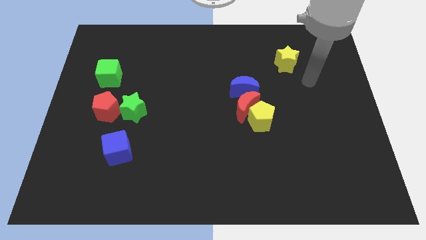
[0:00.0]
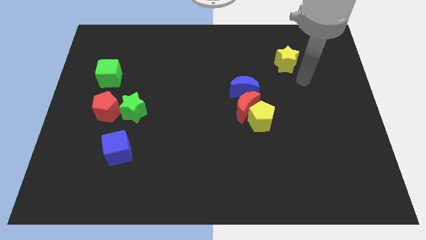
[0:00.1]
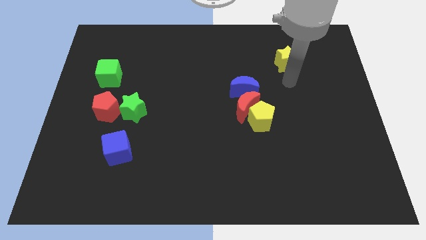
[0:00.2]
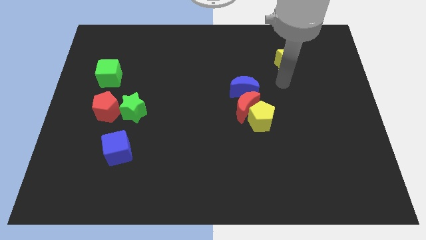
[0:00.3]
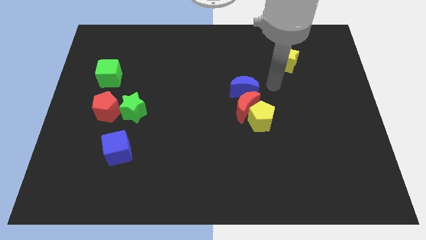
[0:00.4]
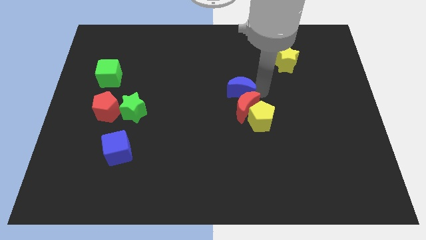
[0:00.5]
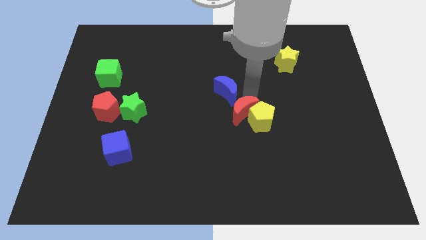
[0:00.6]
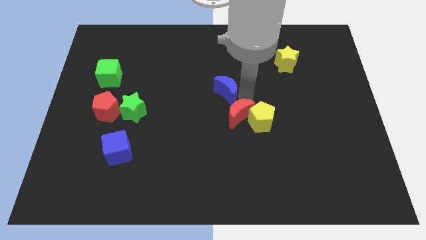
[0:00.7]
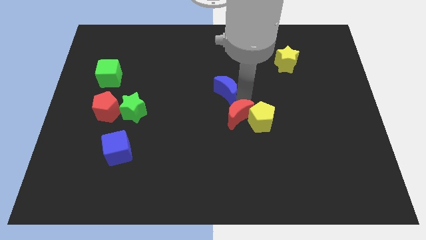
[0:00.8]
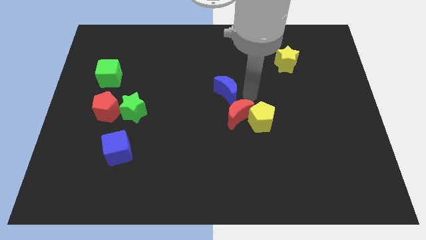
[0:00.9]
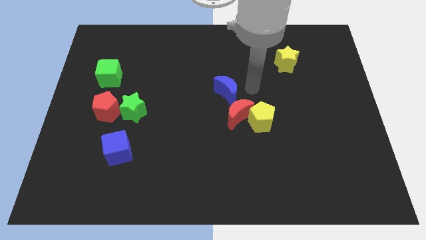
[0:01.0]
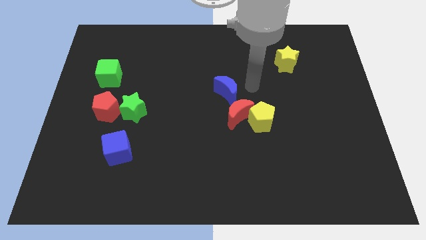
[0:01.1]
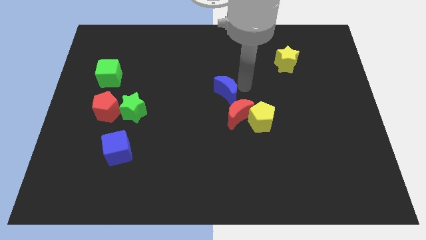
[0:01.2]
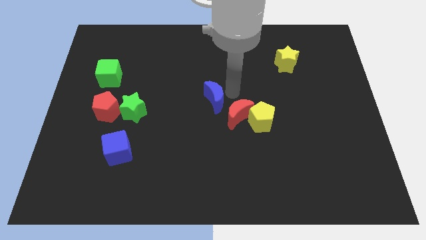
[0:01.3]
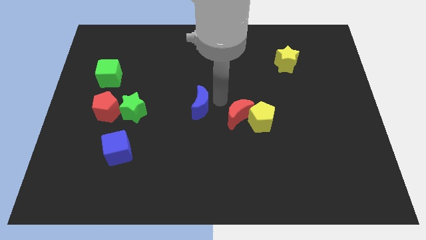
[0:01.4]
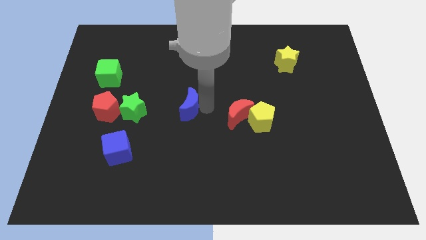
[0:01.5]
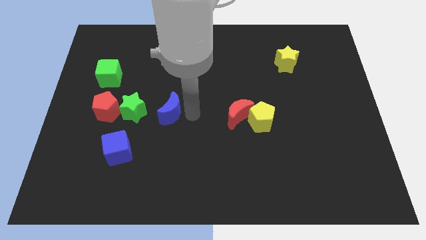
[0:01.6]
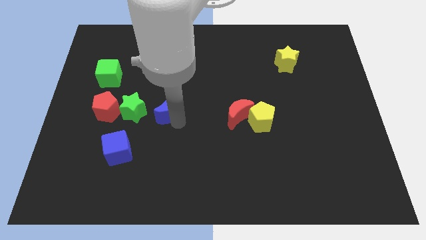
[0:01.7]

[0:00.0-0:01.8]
place blue moon right to green star

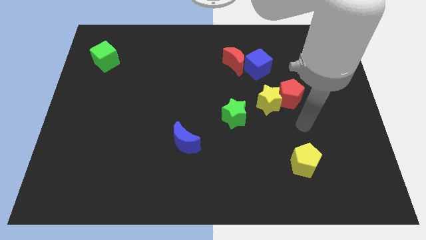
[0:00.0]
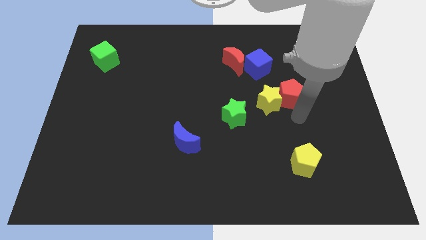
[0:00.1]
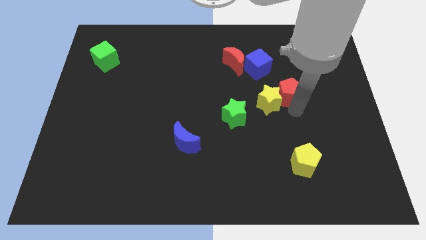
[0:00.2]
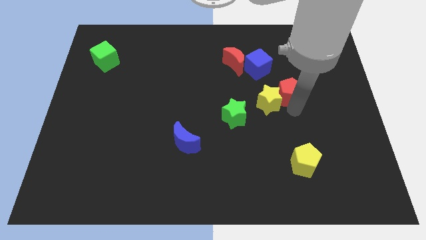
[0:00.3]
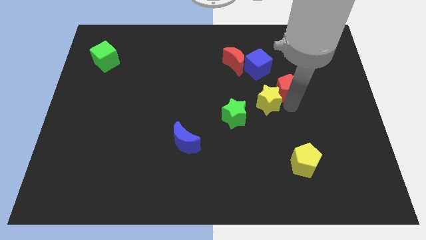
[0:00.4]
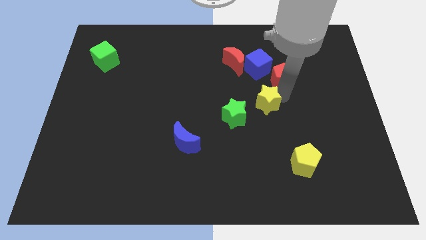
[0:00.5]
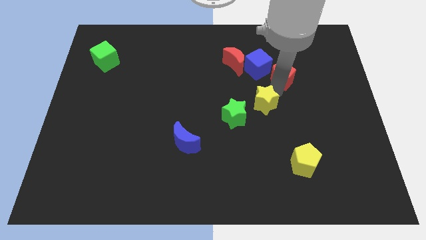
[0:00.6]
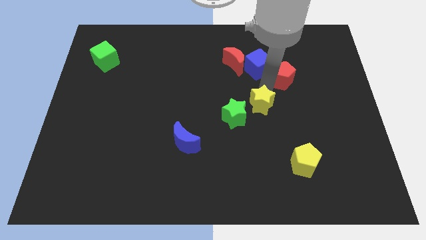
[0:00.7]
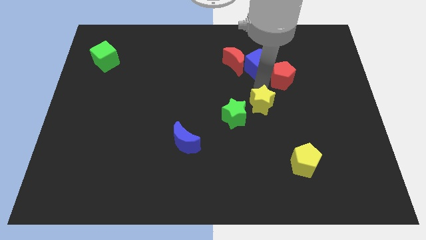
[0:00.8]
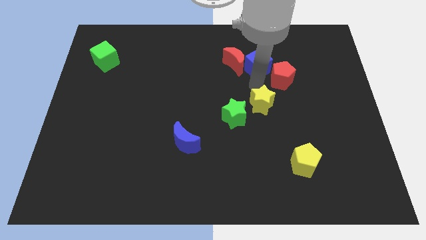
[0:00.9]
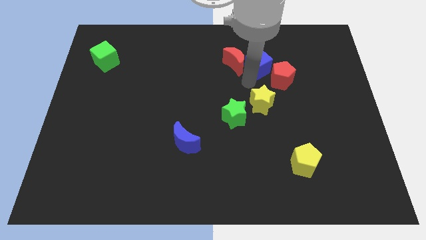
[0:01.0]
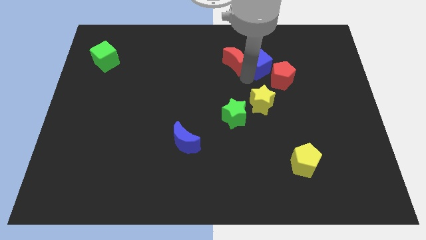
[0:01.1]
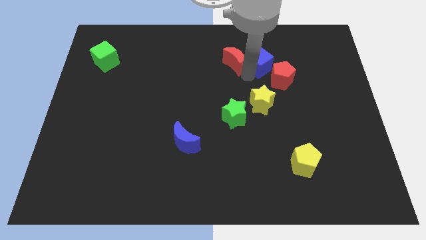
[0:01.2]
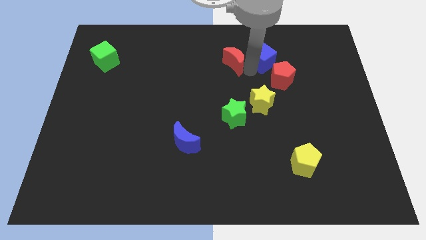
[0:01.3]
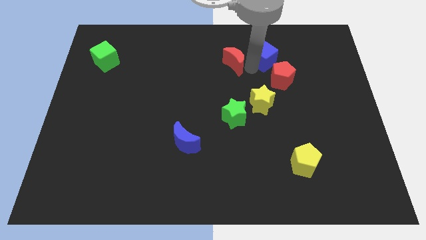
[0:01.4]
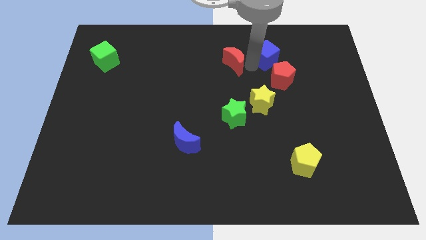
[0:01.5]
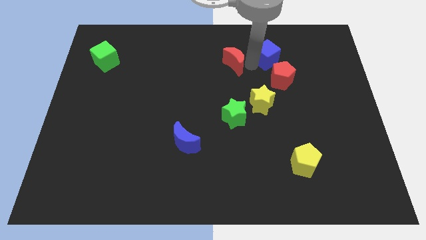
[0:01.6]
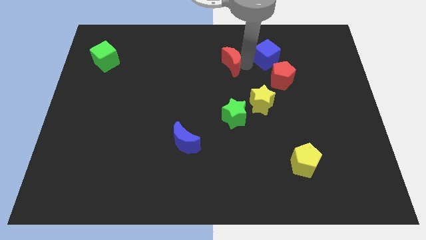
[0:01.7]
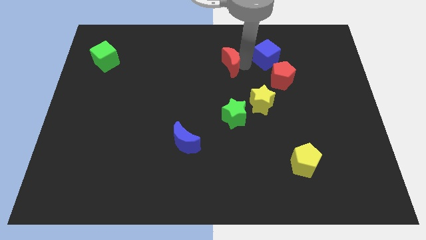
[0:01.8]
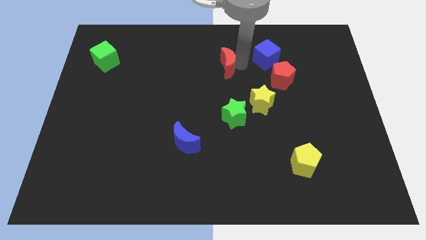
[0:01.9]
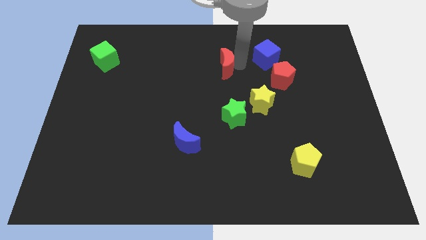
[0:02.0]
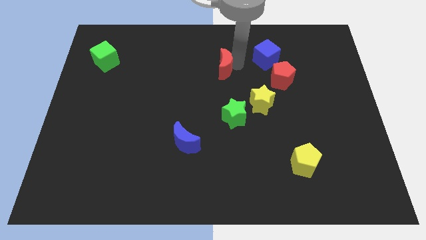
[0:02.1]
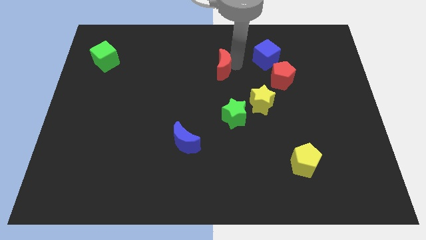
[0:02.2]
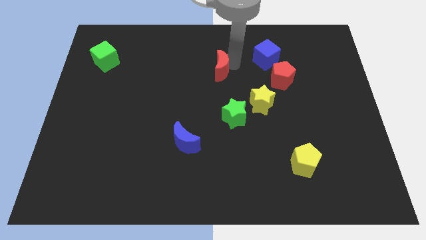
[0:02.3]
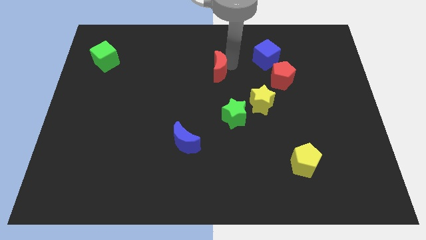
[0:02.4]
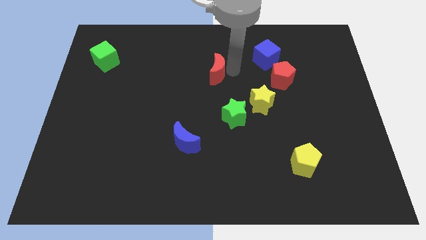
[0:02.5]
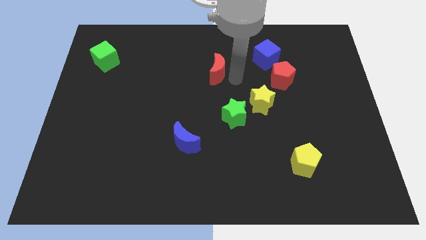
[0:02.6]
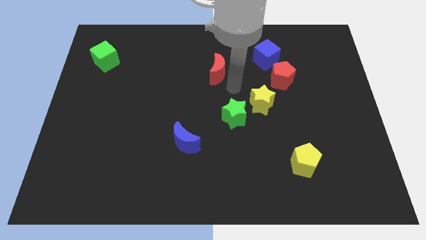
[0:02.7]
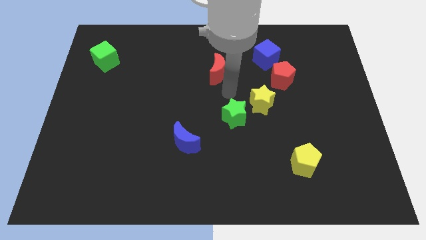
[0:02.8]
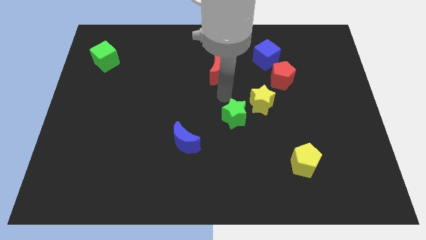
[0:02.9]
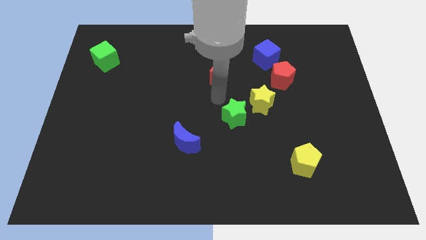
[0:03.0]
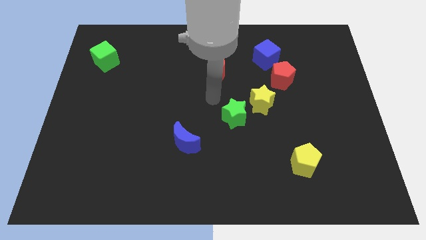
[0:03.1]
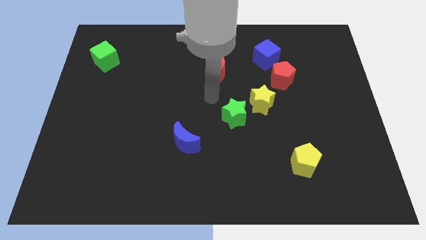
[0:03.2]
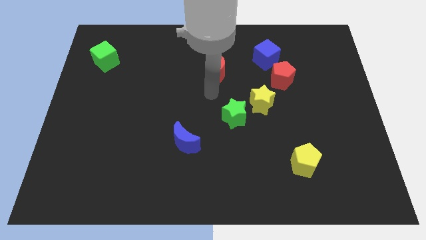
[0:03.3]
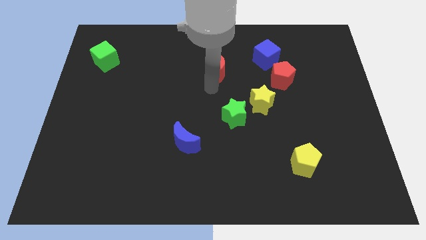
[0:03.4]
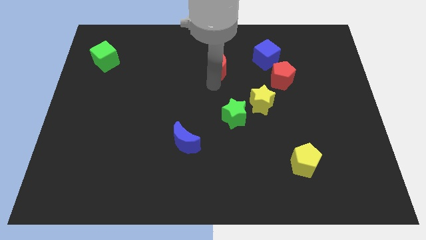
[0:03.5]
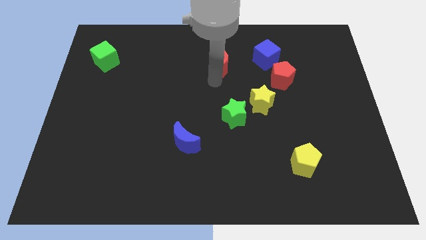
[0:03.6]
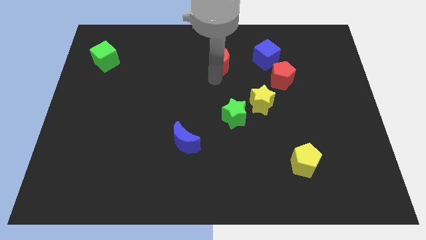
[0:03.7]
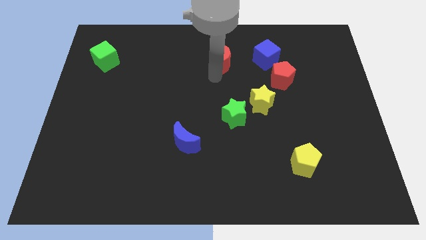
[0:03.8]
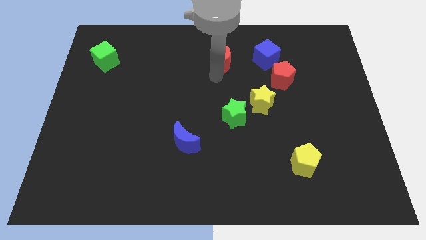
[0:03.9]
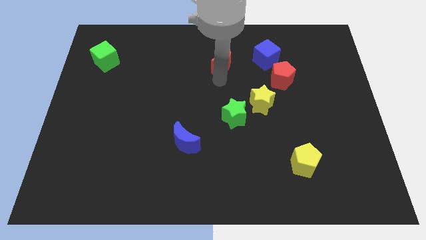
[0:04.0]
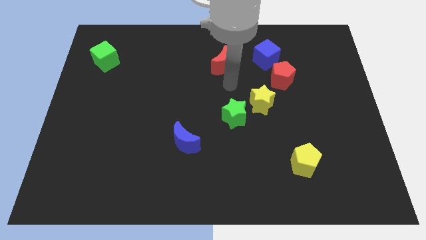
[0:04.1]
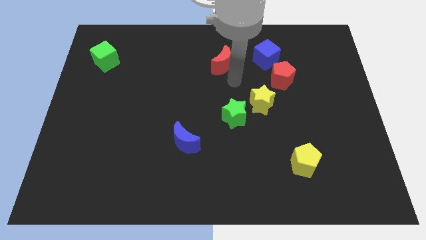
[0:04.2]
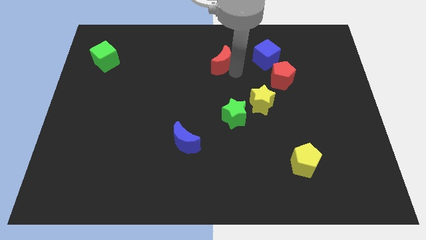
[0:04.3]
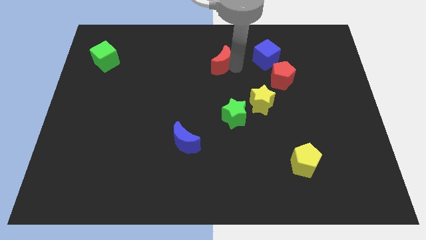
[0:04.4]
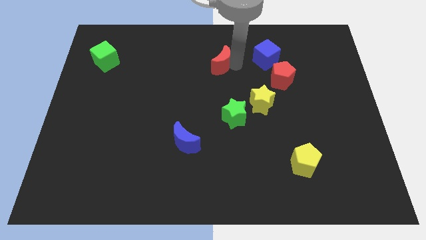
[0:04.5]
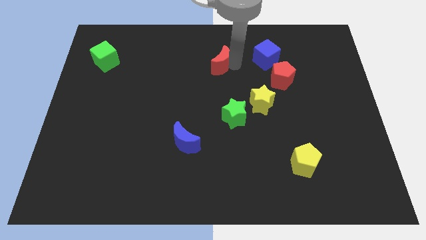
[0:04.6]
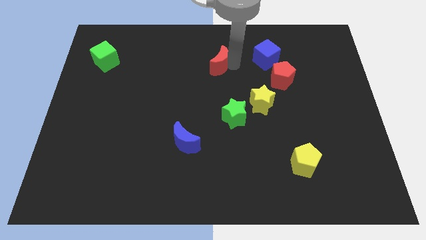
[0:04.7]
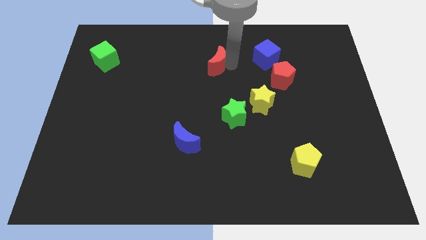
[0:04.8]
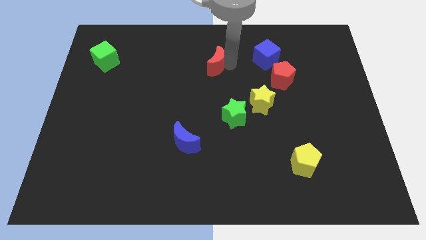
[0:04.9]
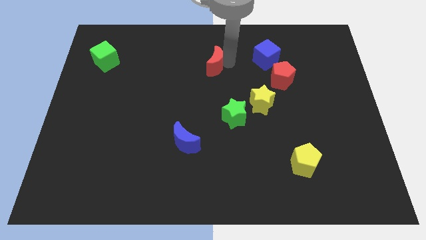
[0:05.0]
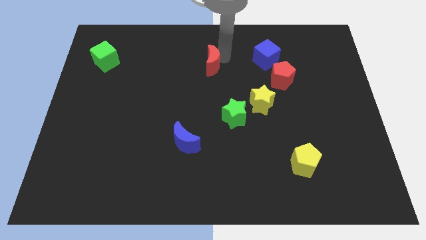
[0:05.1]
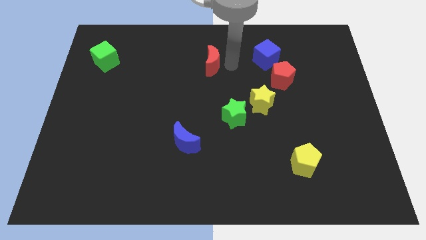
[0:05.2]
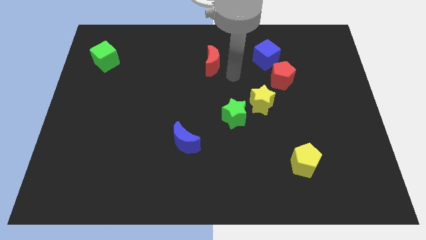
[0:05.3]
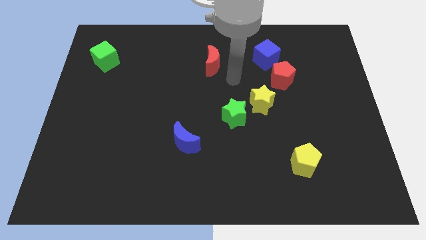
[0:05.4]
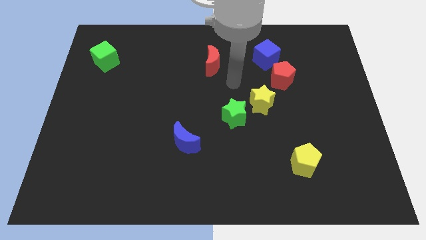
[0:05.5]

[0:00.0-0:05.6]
place the red moon in between the green cube and blue cube

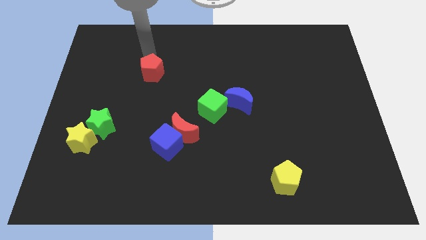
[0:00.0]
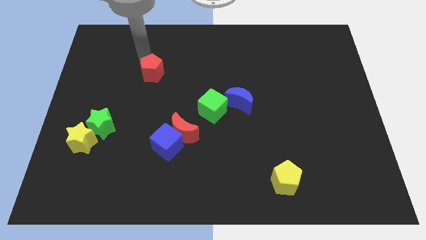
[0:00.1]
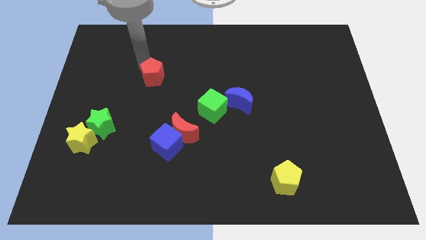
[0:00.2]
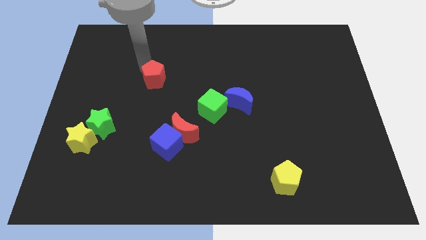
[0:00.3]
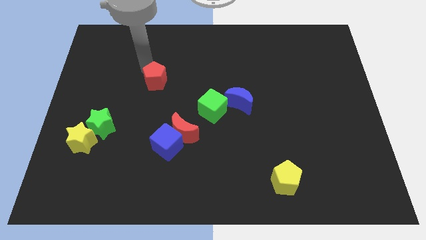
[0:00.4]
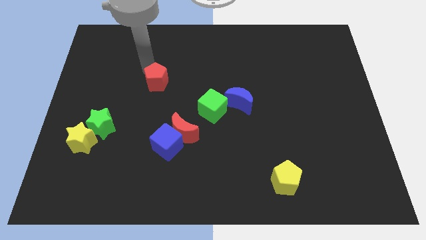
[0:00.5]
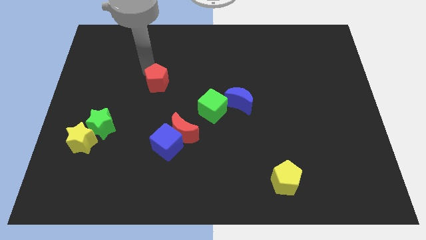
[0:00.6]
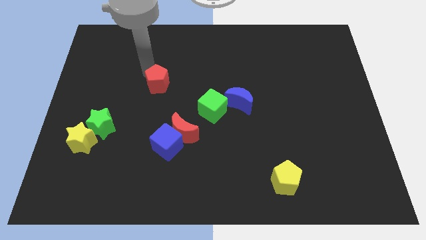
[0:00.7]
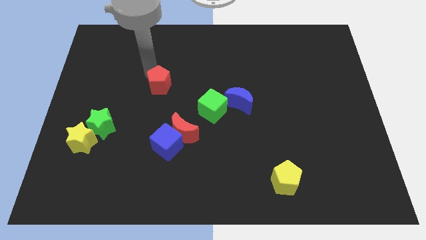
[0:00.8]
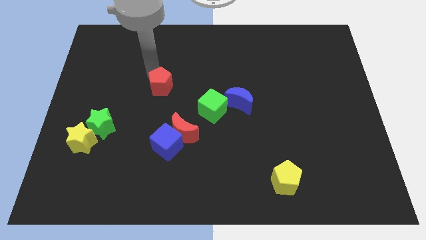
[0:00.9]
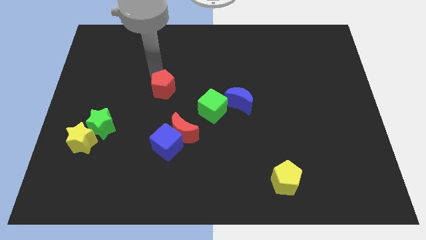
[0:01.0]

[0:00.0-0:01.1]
place the red pentagon above the blue cube

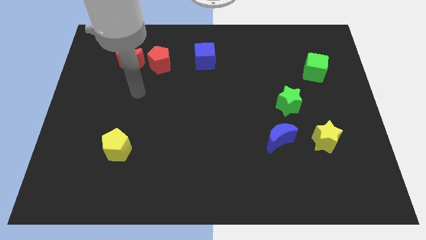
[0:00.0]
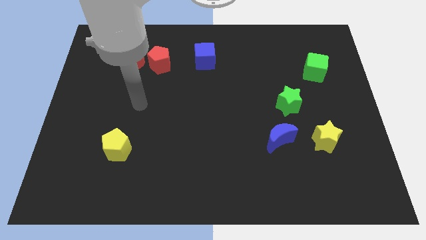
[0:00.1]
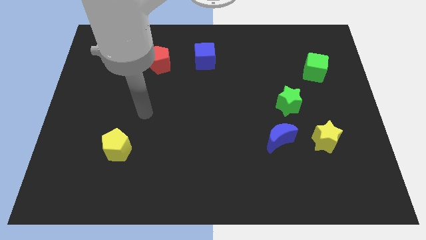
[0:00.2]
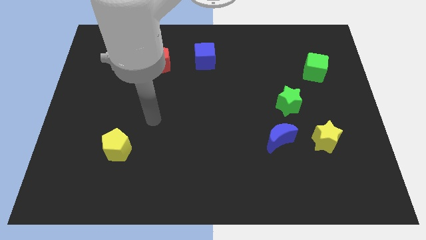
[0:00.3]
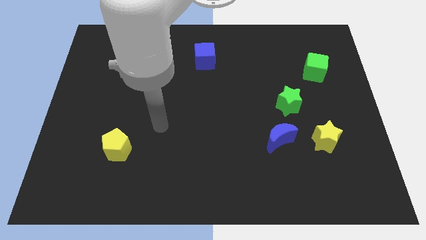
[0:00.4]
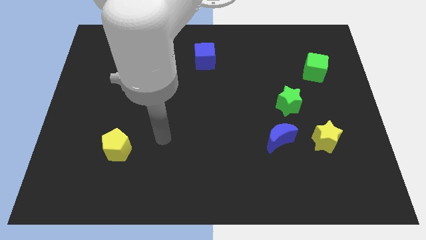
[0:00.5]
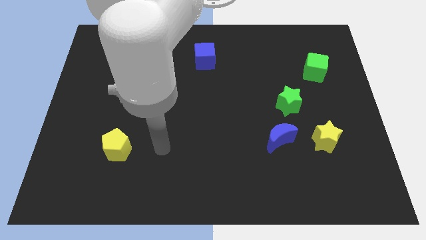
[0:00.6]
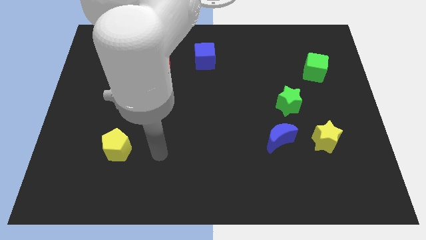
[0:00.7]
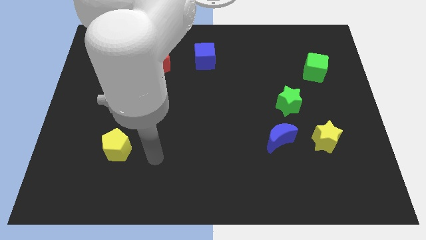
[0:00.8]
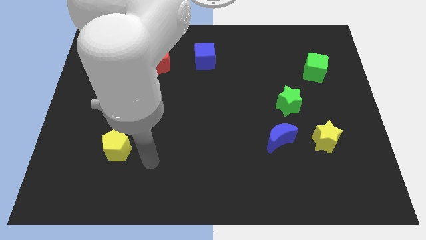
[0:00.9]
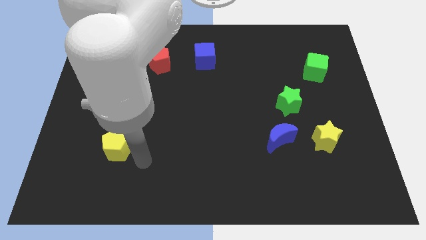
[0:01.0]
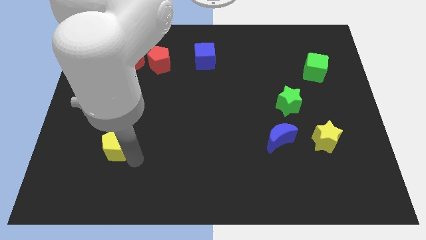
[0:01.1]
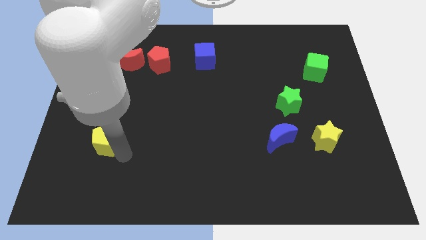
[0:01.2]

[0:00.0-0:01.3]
move the arm to the right of the yellow pentagon
